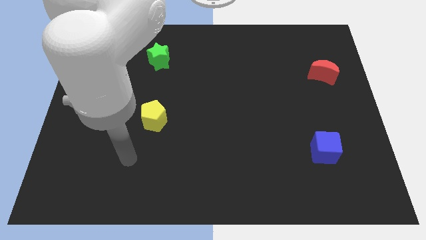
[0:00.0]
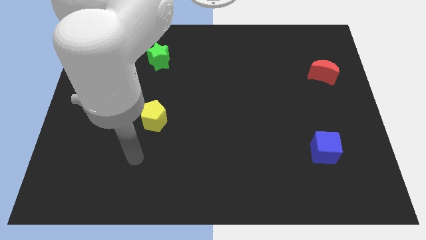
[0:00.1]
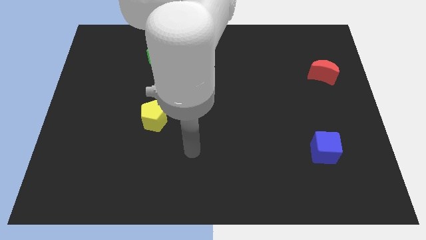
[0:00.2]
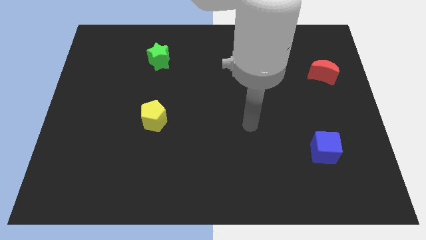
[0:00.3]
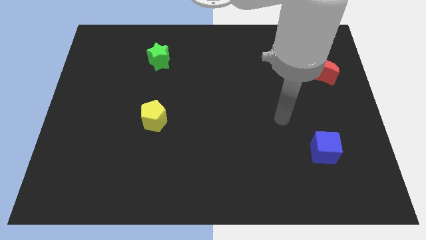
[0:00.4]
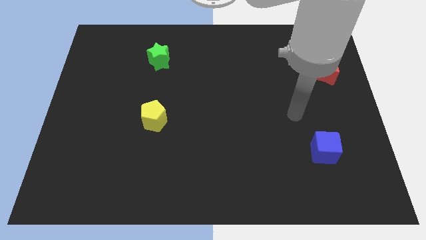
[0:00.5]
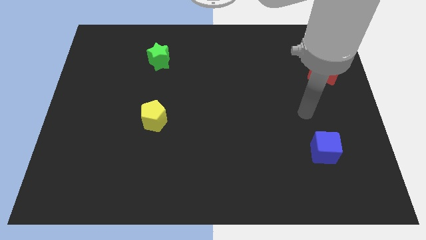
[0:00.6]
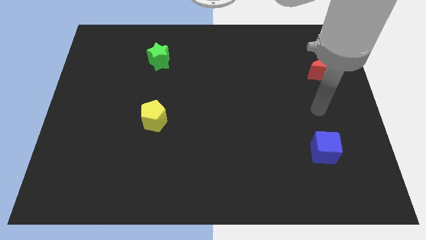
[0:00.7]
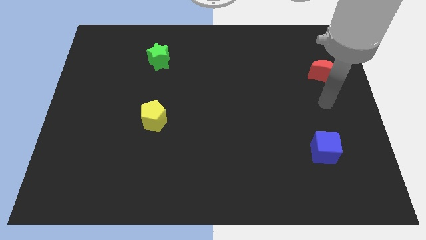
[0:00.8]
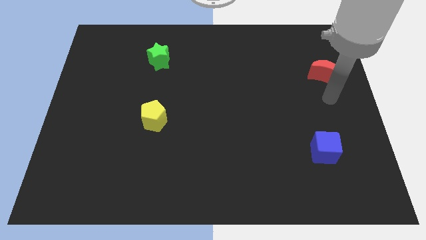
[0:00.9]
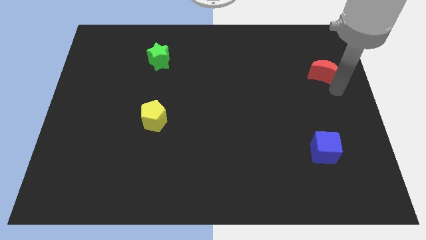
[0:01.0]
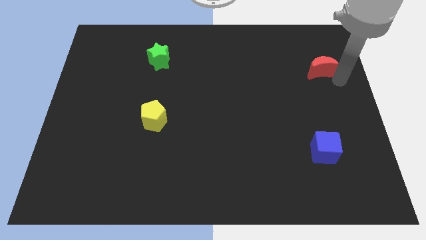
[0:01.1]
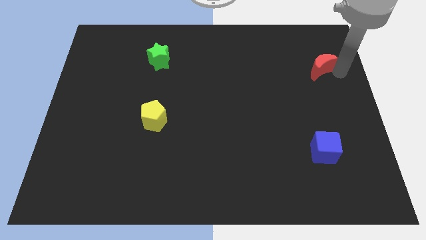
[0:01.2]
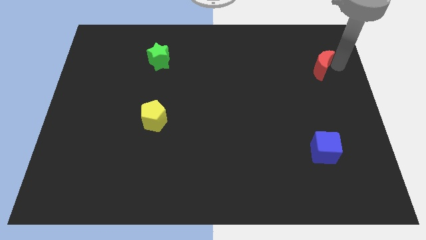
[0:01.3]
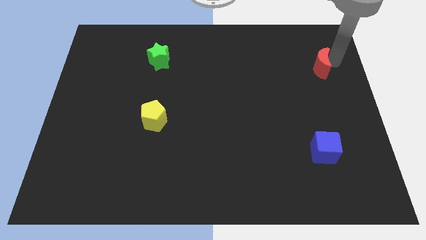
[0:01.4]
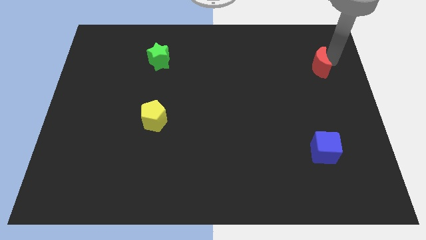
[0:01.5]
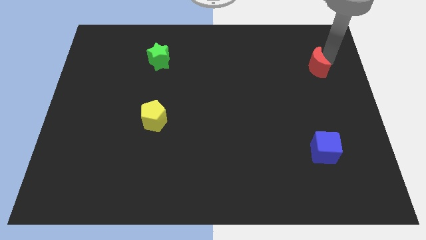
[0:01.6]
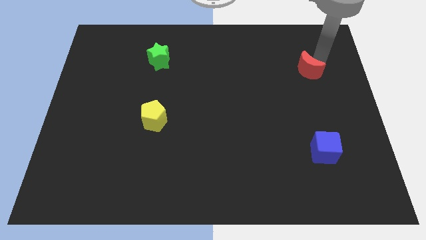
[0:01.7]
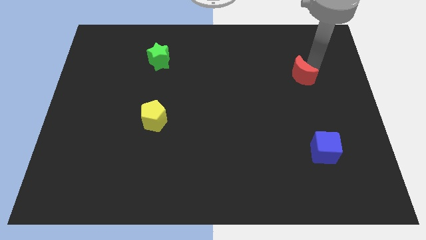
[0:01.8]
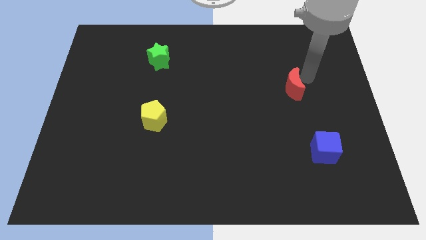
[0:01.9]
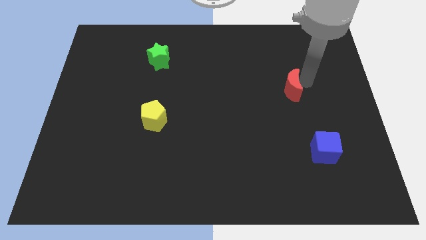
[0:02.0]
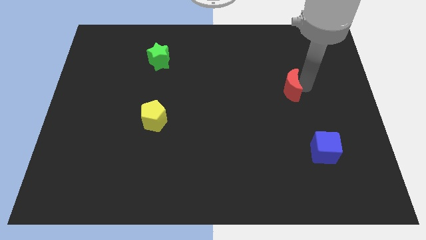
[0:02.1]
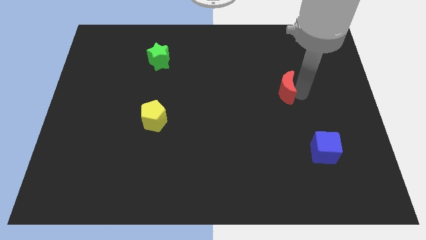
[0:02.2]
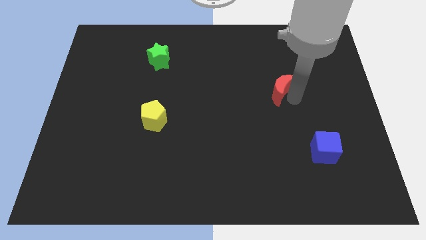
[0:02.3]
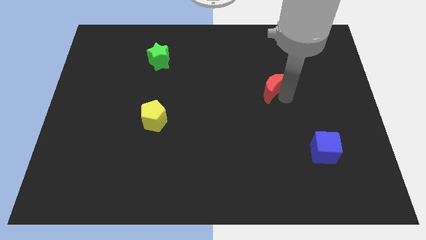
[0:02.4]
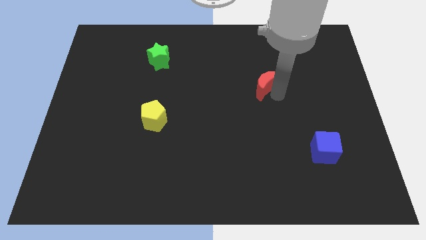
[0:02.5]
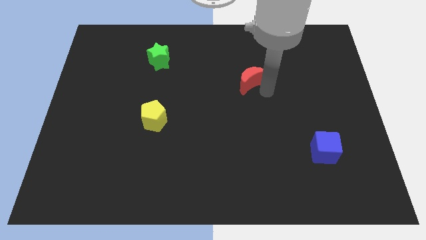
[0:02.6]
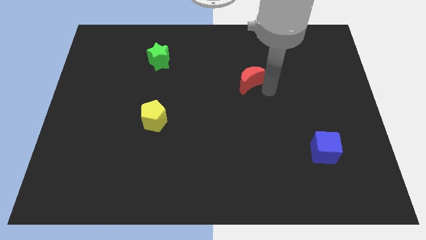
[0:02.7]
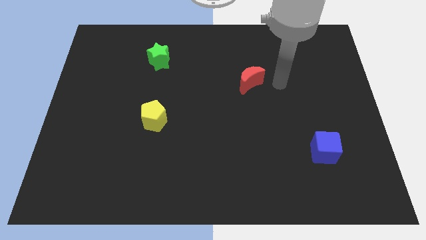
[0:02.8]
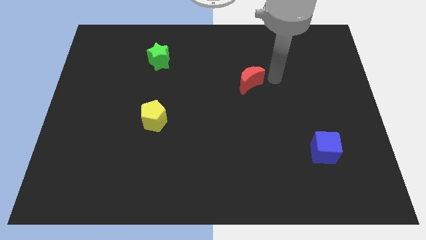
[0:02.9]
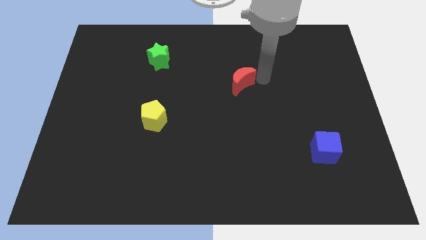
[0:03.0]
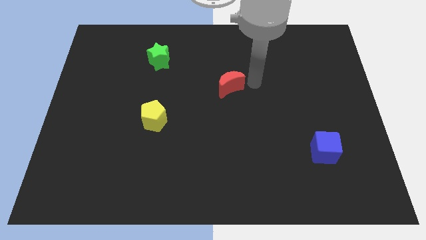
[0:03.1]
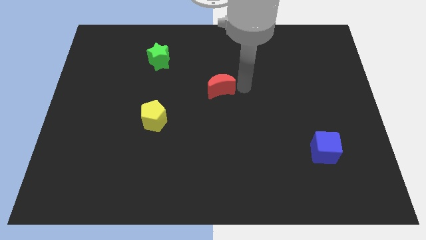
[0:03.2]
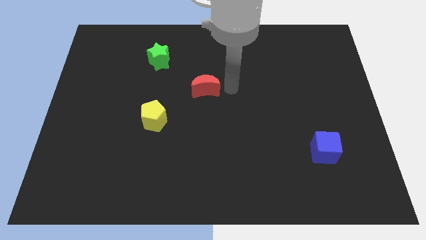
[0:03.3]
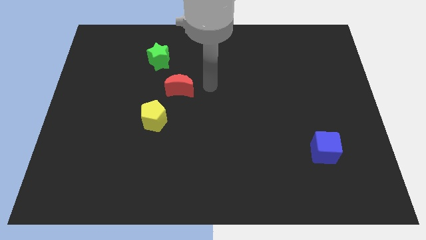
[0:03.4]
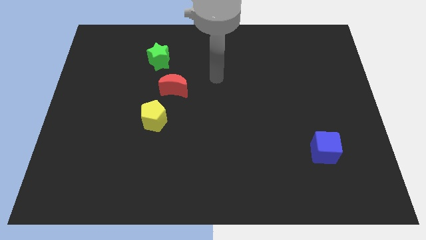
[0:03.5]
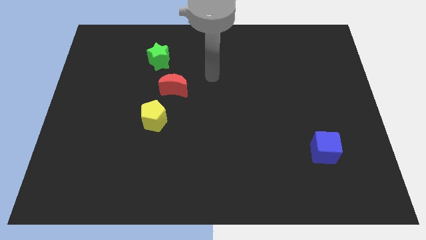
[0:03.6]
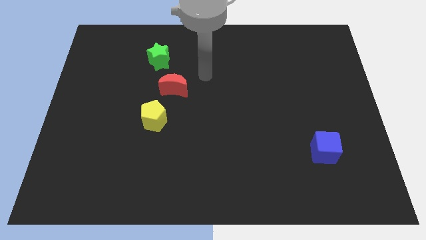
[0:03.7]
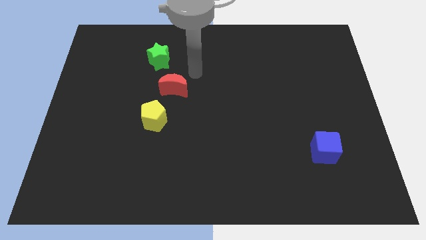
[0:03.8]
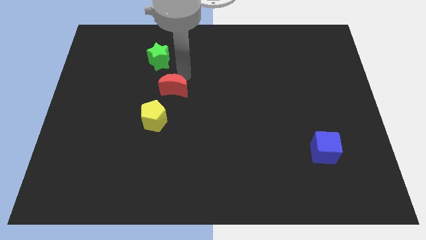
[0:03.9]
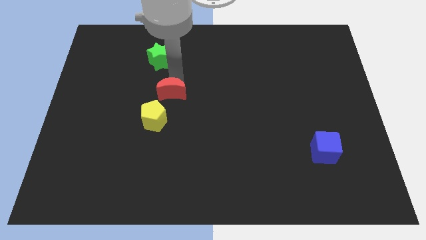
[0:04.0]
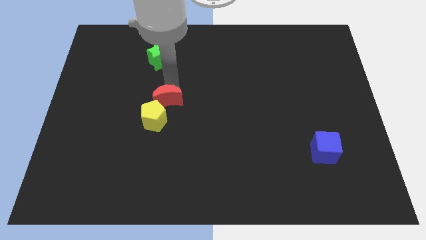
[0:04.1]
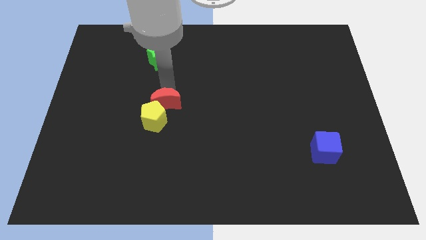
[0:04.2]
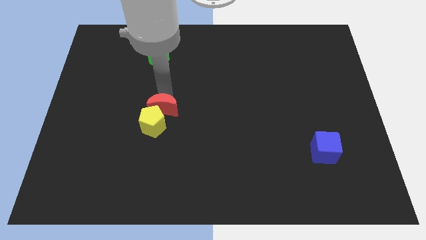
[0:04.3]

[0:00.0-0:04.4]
push the moon to the yellow pentagon

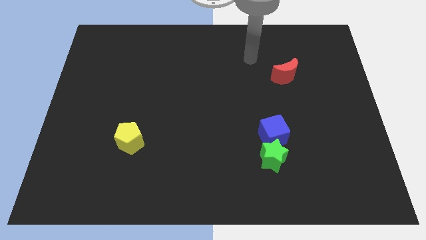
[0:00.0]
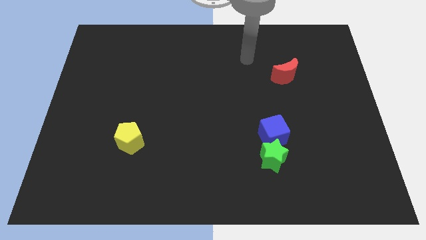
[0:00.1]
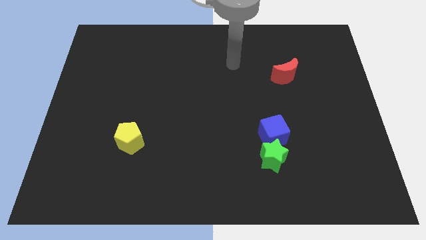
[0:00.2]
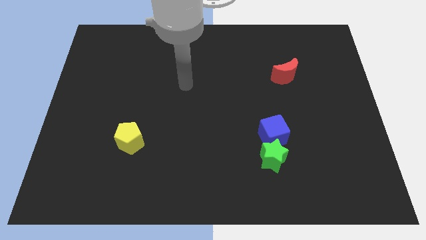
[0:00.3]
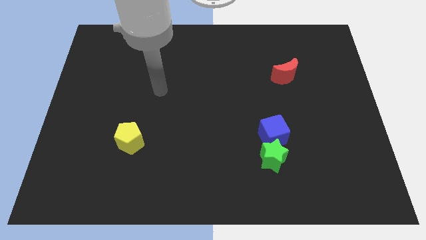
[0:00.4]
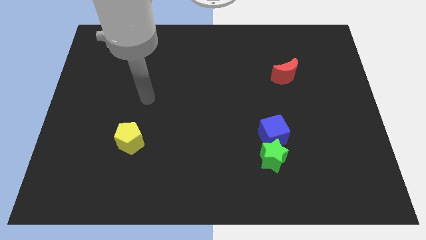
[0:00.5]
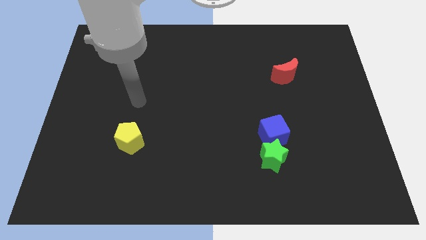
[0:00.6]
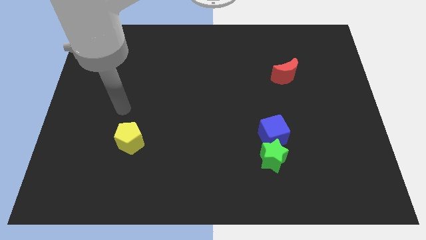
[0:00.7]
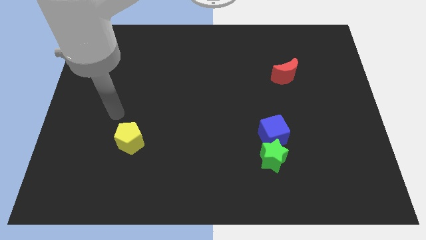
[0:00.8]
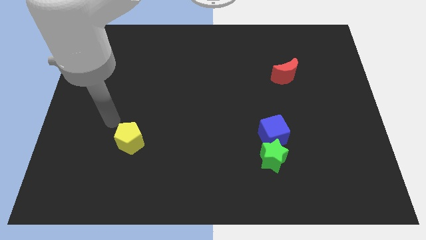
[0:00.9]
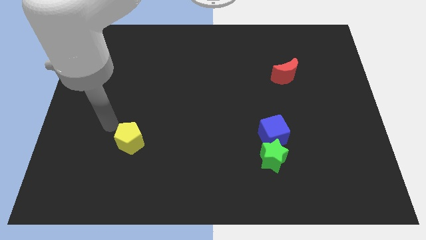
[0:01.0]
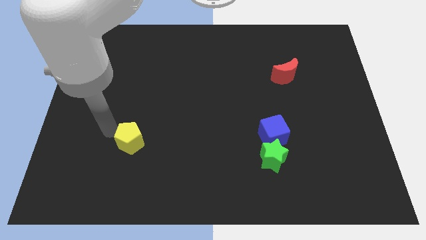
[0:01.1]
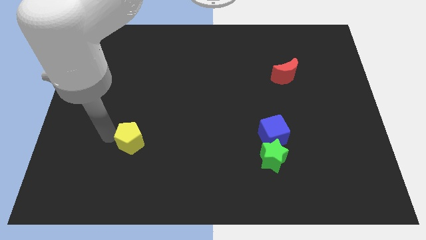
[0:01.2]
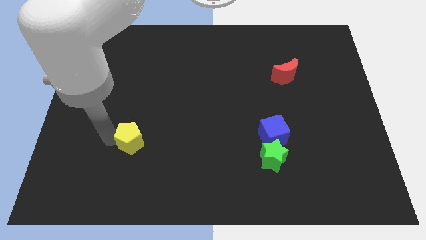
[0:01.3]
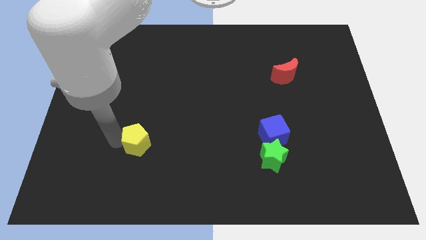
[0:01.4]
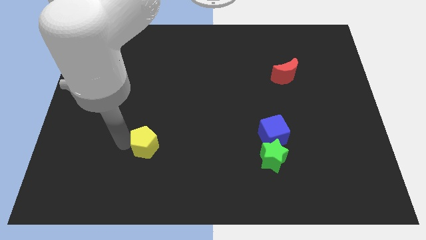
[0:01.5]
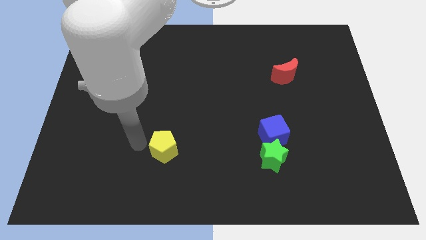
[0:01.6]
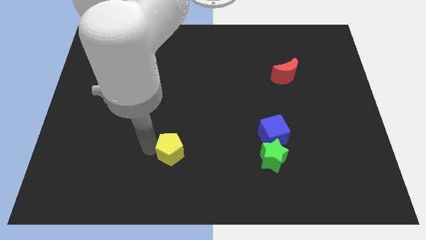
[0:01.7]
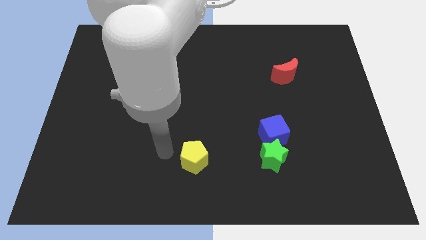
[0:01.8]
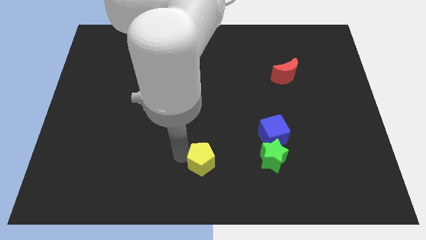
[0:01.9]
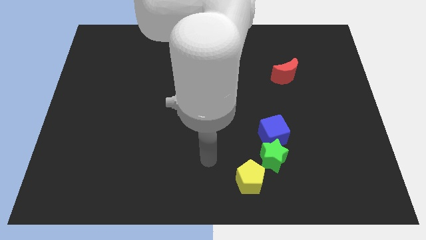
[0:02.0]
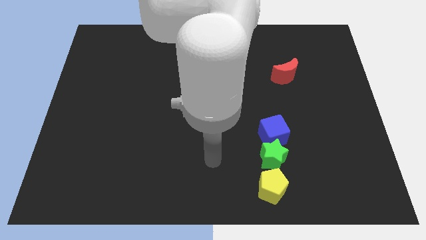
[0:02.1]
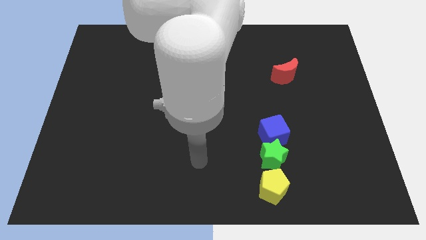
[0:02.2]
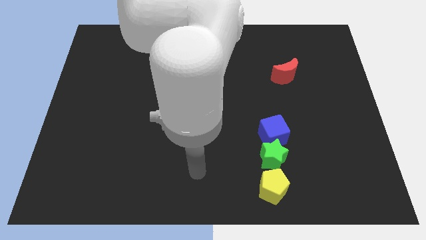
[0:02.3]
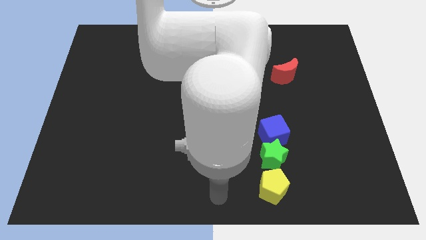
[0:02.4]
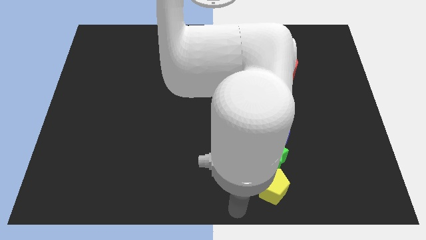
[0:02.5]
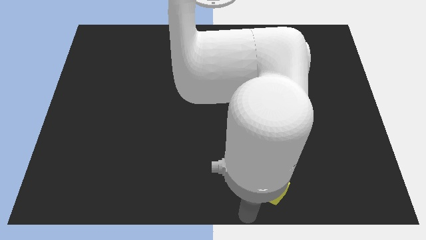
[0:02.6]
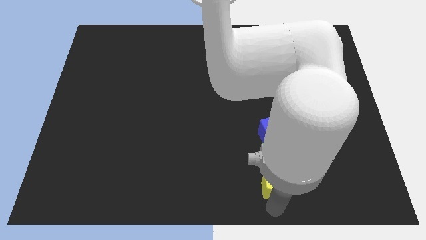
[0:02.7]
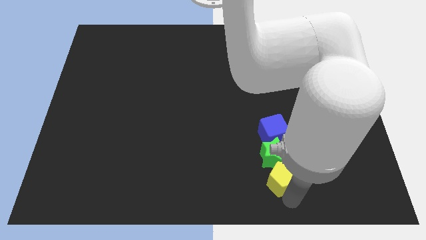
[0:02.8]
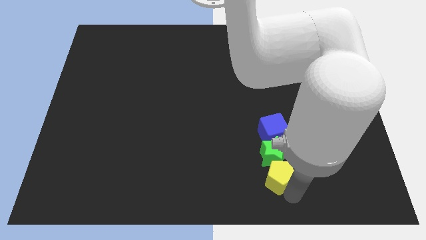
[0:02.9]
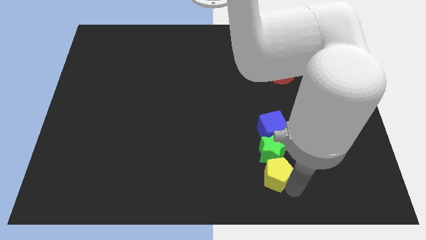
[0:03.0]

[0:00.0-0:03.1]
slide the pentagon to the green star

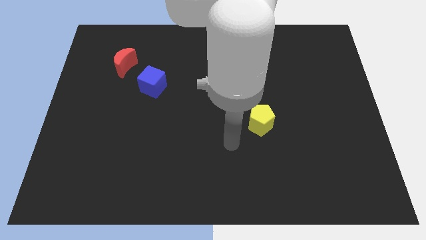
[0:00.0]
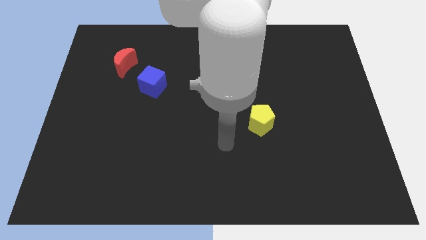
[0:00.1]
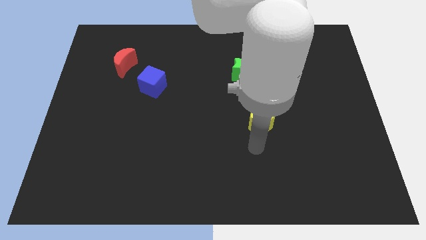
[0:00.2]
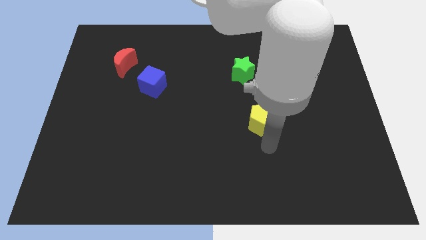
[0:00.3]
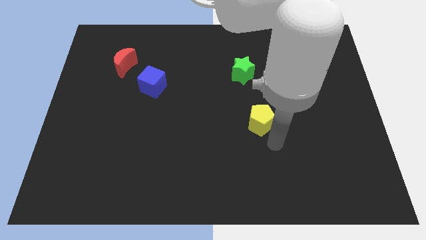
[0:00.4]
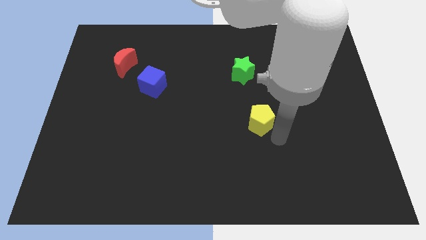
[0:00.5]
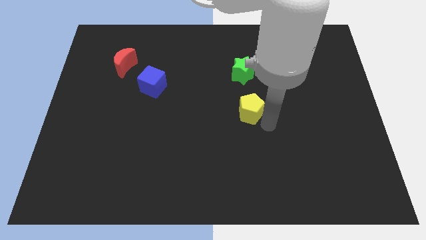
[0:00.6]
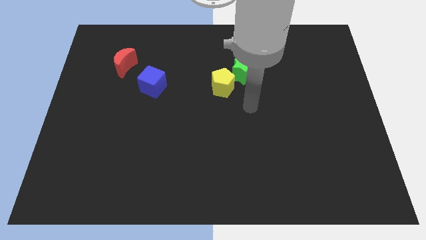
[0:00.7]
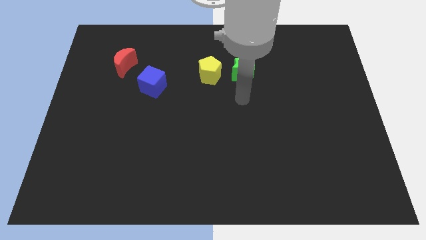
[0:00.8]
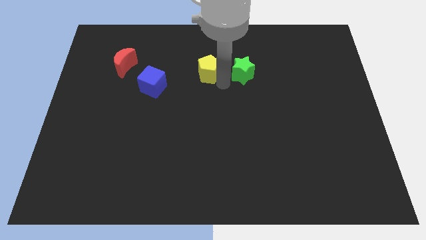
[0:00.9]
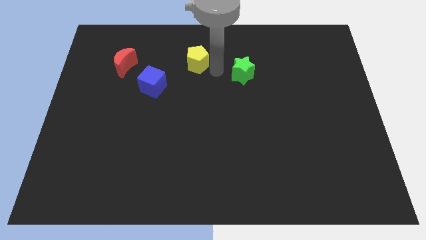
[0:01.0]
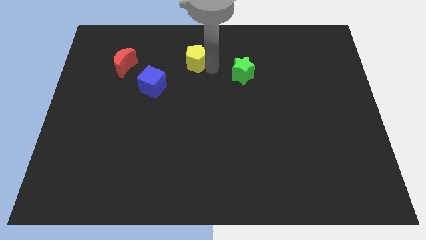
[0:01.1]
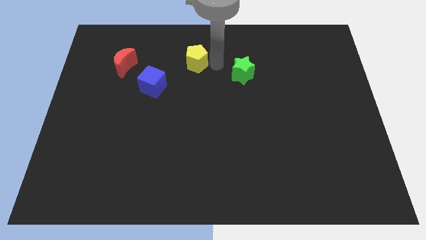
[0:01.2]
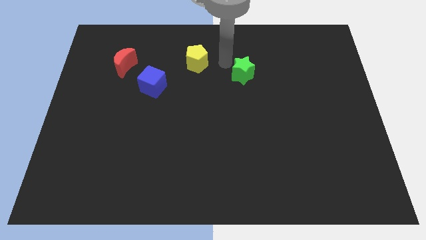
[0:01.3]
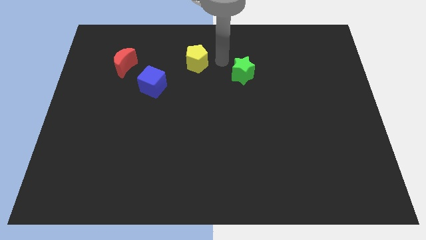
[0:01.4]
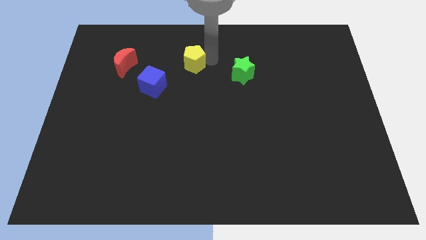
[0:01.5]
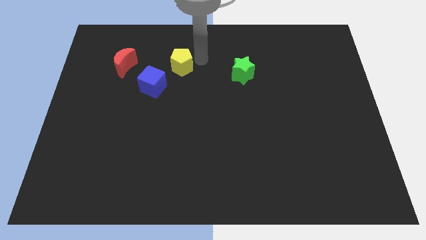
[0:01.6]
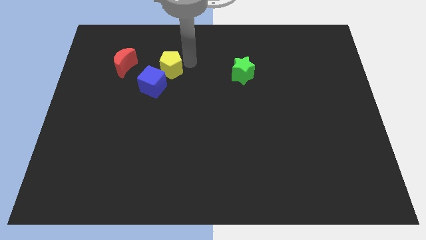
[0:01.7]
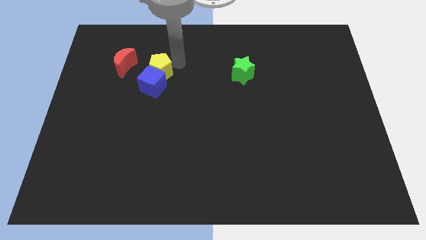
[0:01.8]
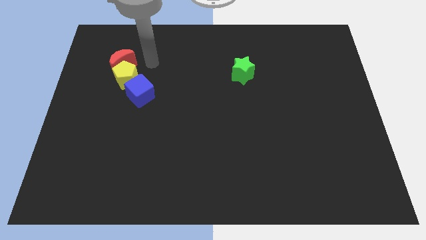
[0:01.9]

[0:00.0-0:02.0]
push the yellow pentagon towards the red block
